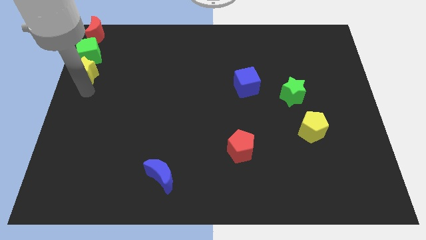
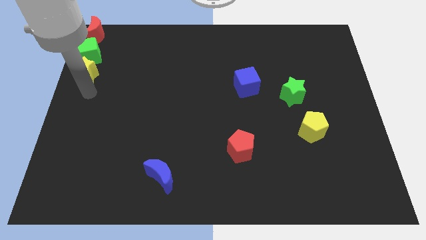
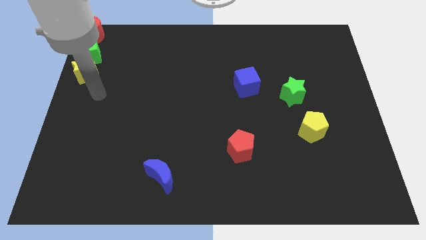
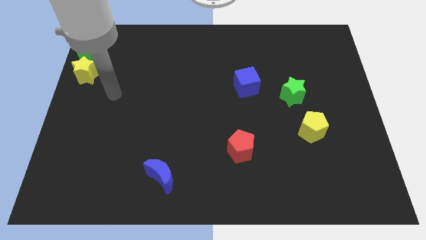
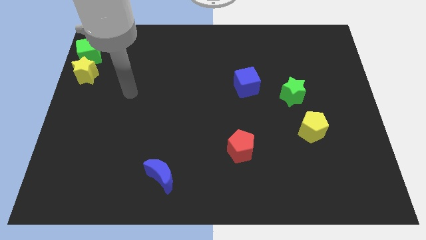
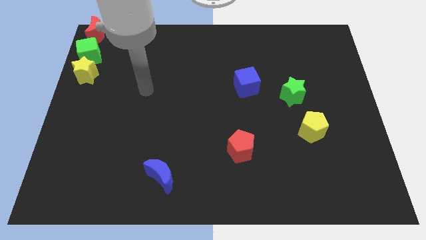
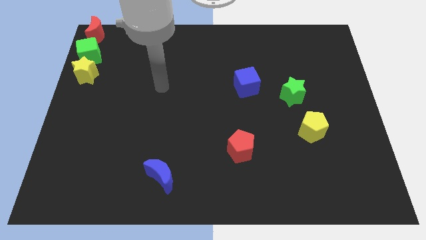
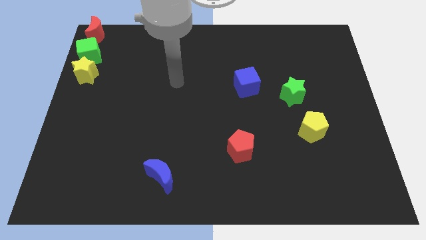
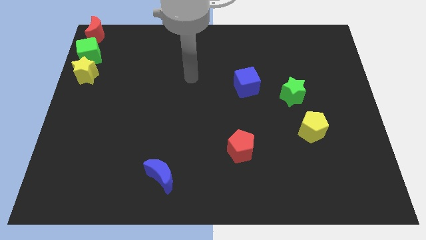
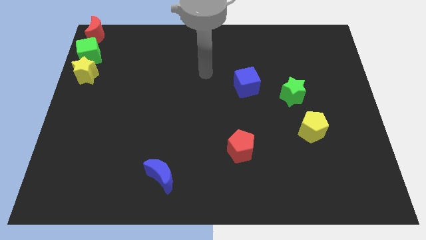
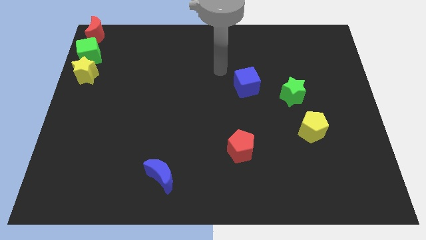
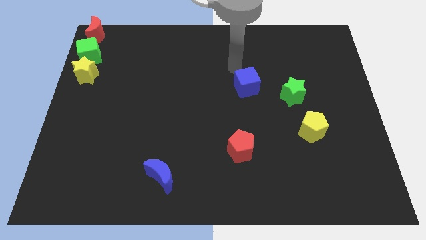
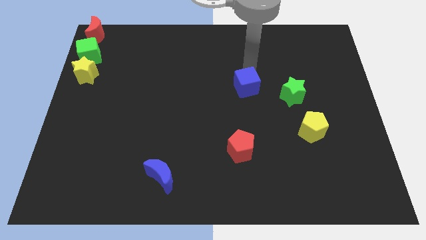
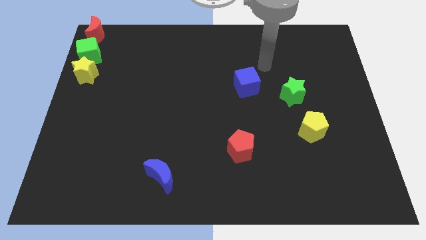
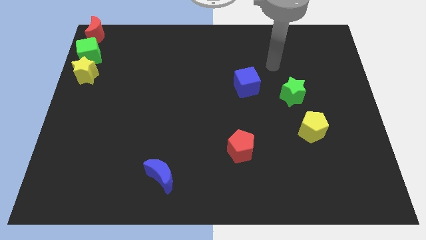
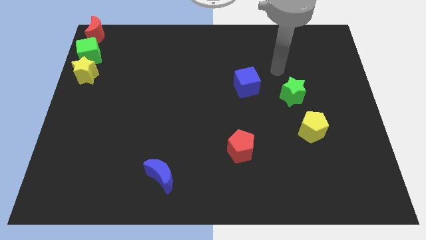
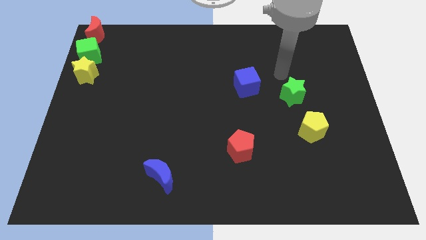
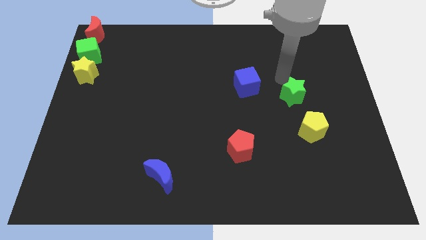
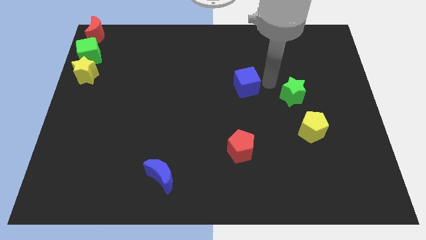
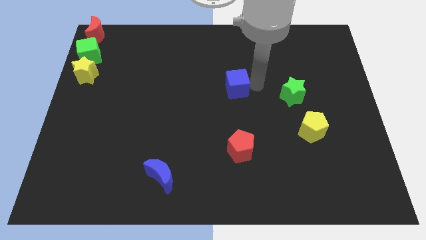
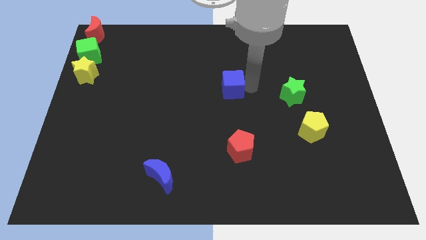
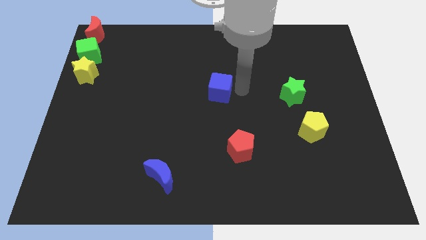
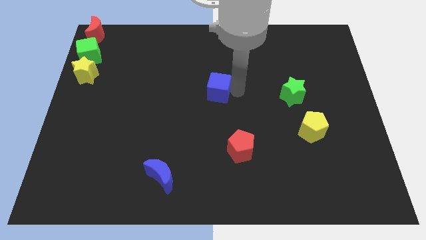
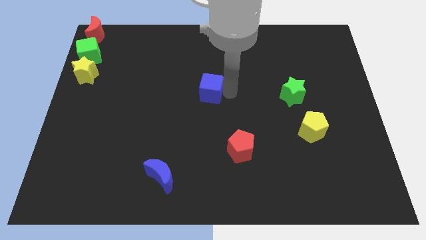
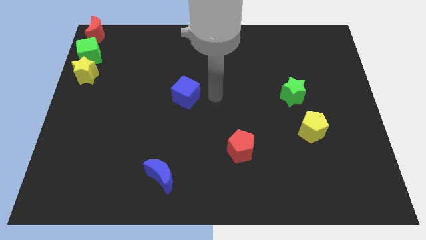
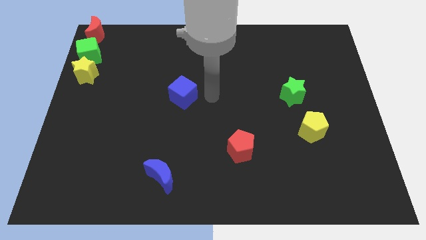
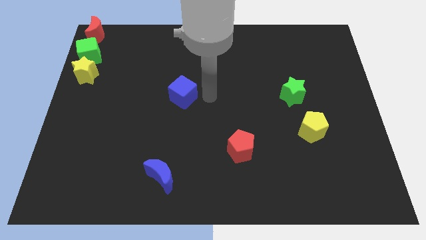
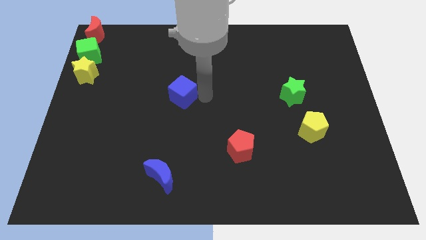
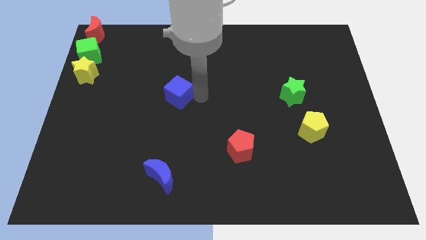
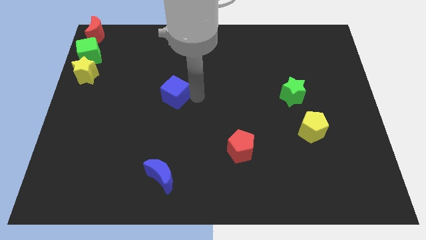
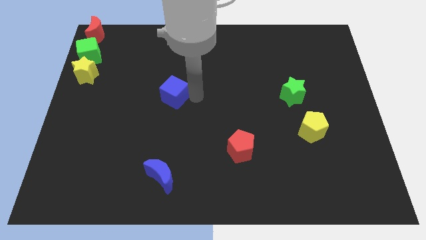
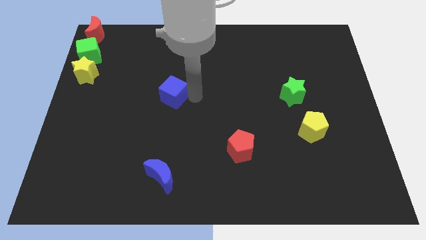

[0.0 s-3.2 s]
slide the blue cube slightly to the left

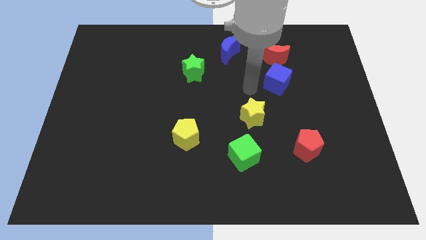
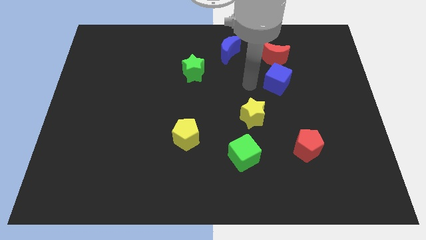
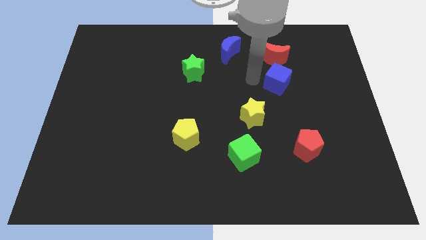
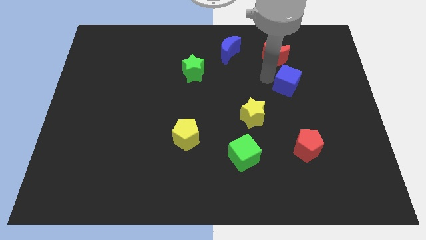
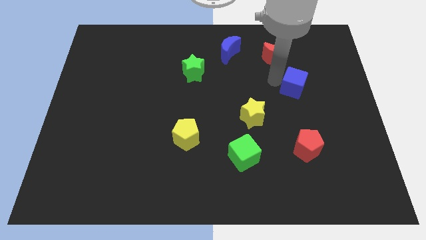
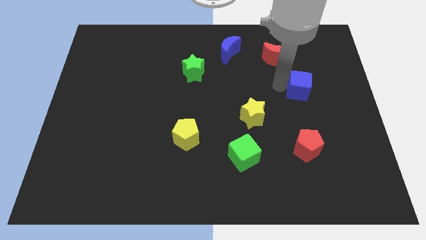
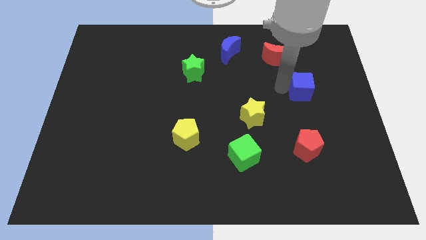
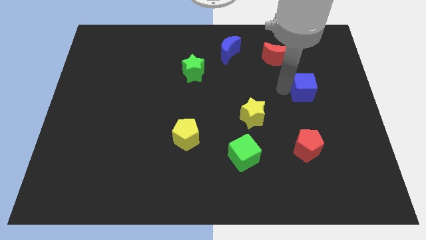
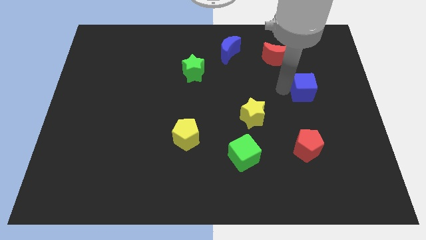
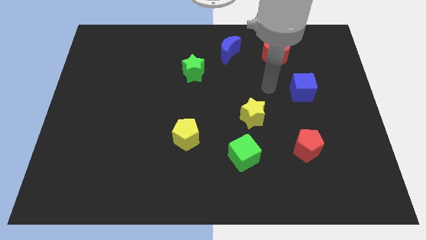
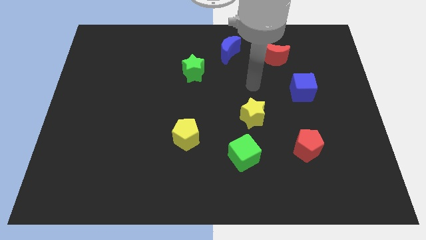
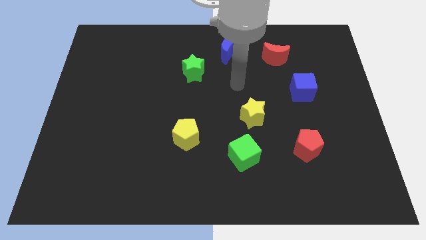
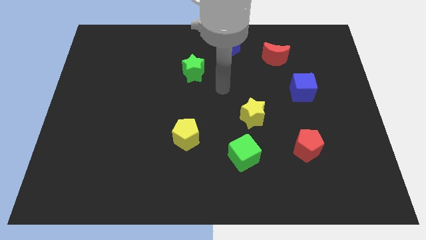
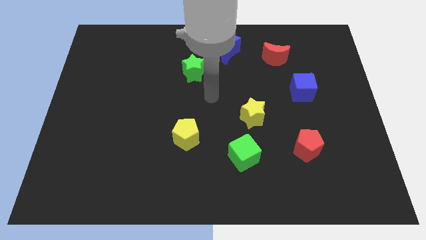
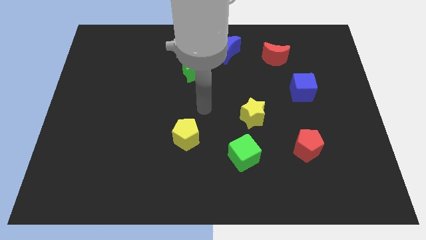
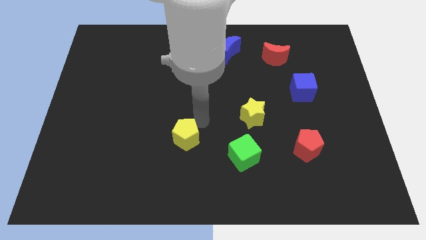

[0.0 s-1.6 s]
move blue cube to the top of red pentagon

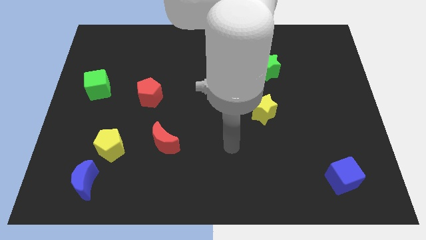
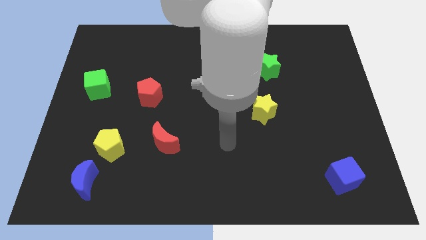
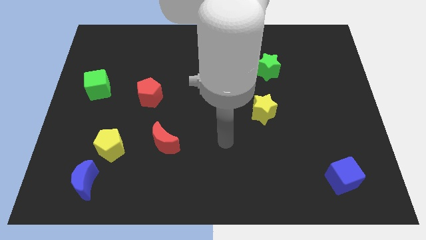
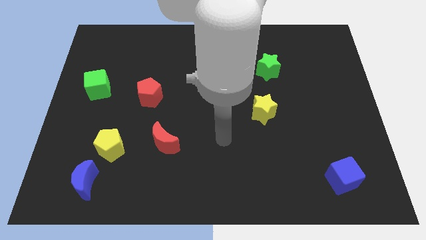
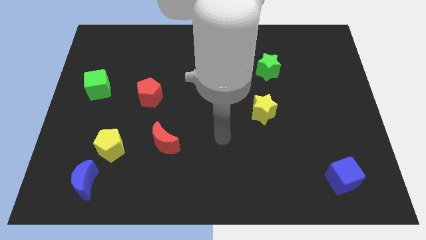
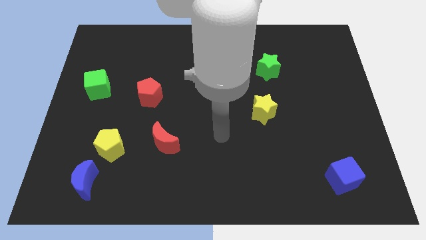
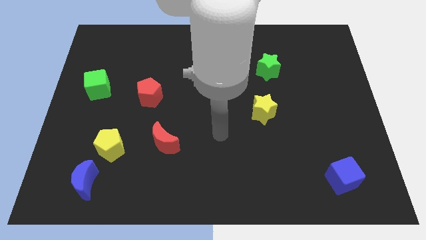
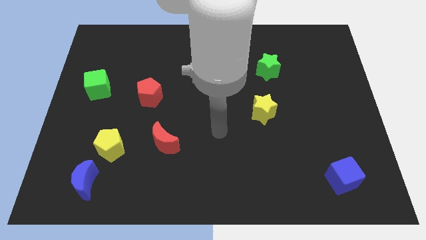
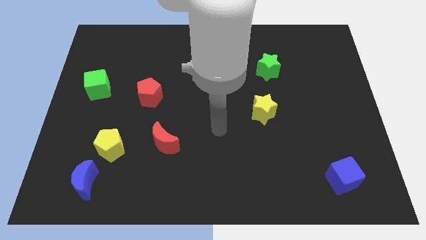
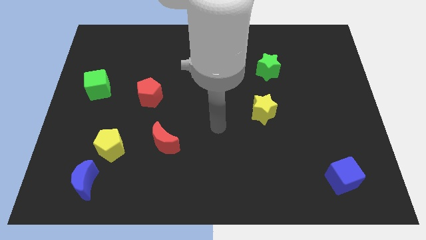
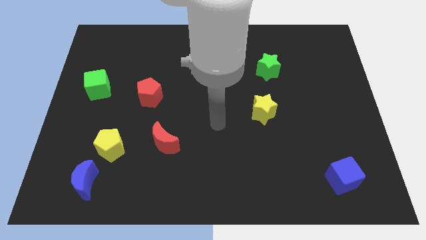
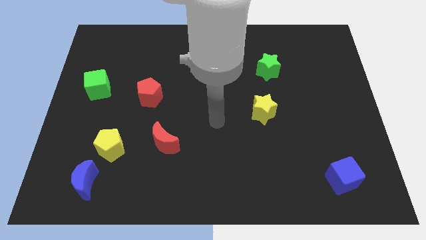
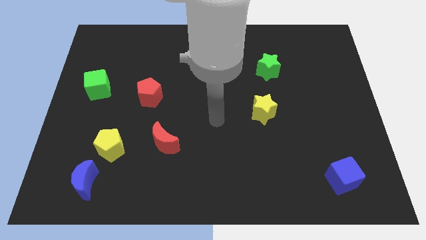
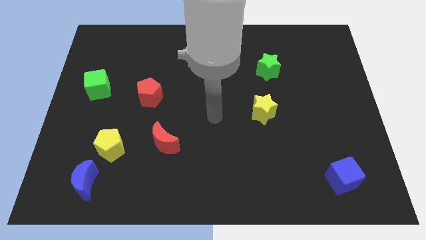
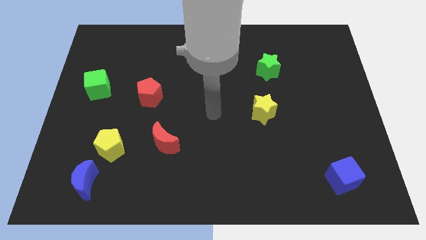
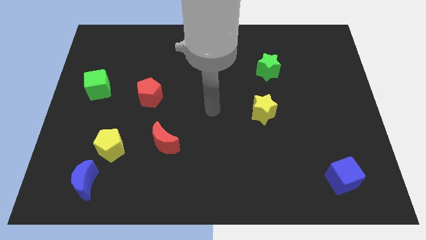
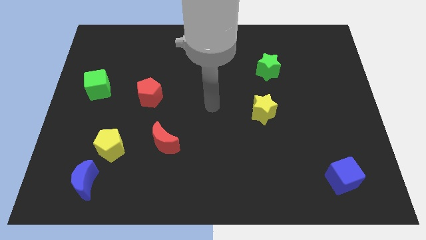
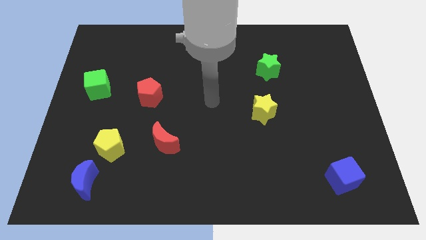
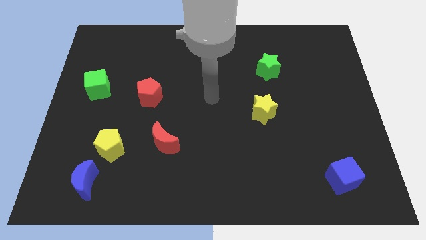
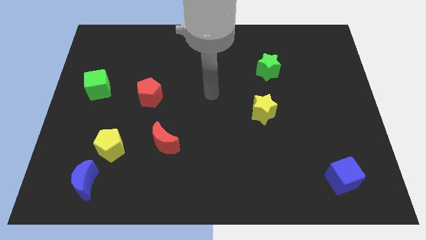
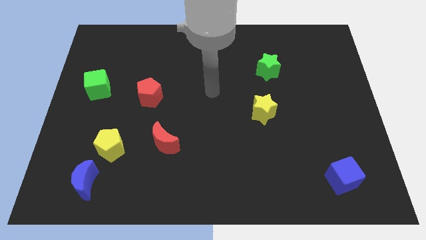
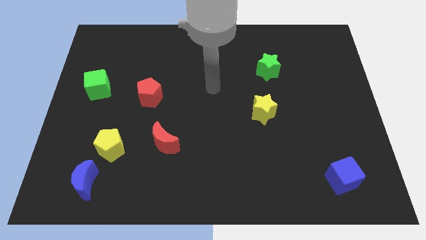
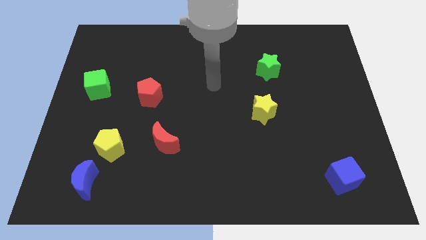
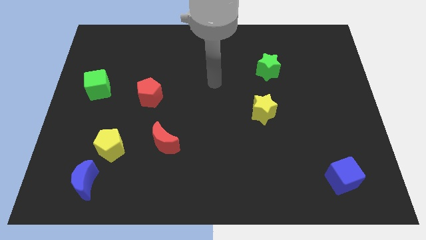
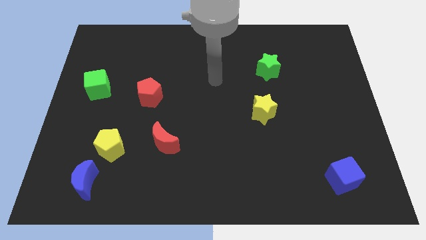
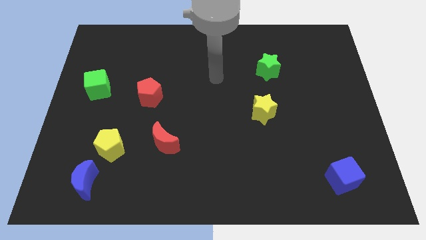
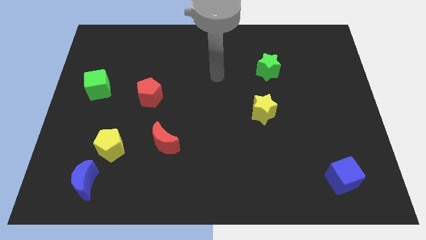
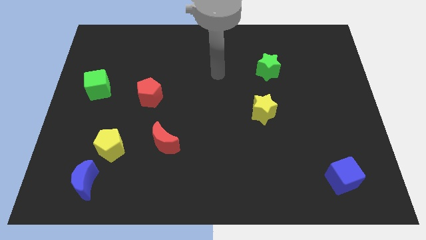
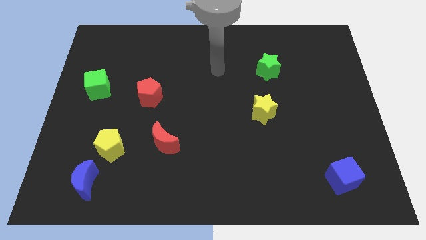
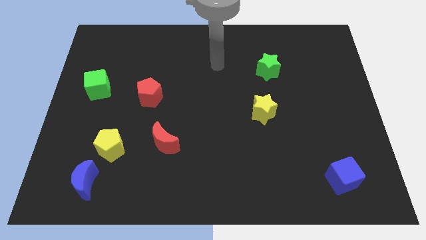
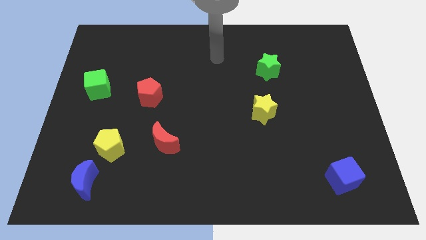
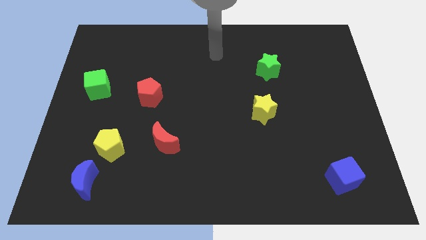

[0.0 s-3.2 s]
move your arm to the top

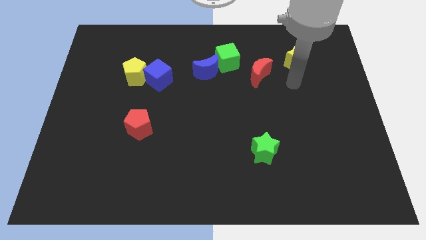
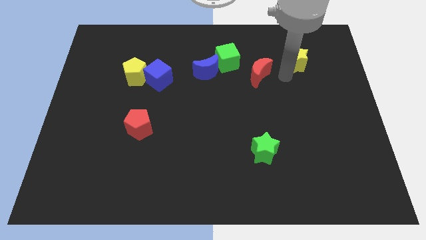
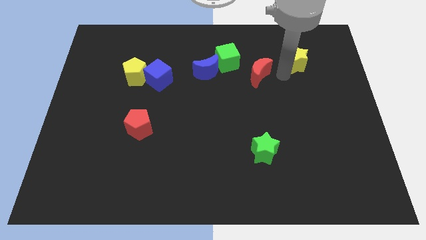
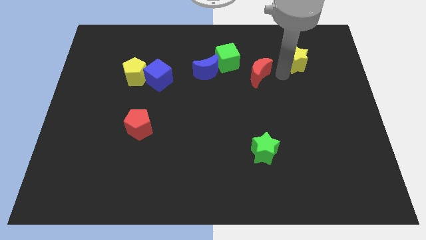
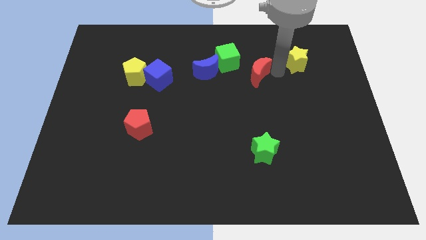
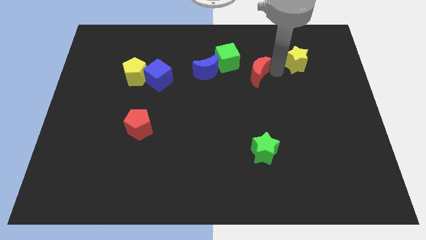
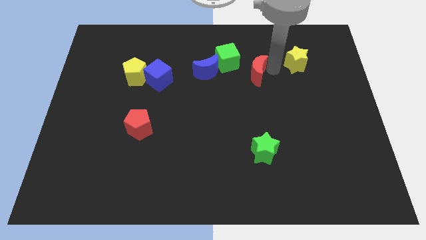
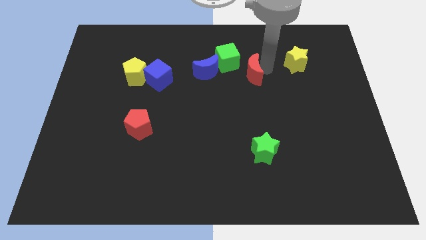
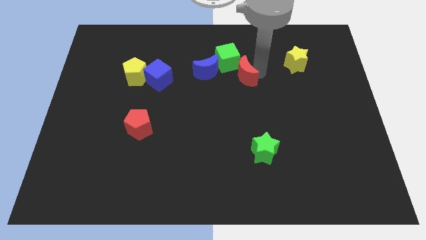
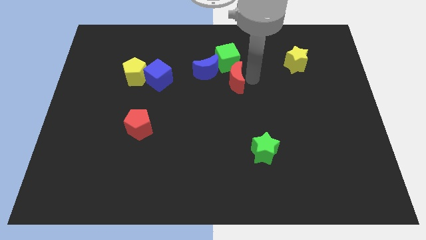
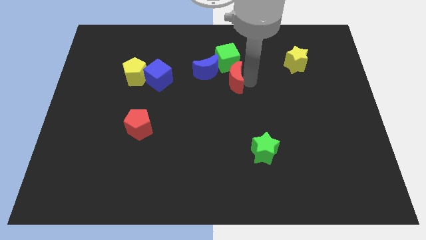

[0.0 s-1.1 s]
put the red crescent at the bottom of green cube
